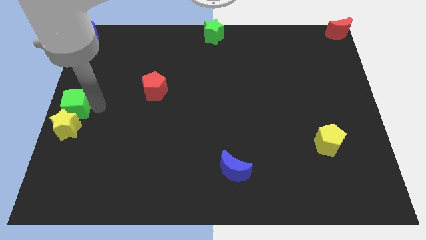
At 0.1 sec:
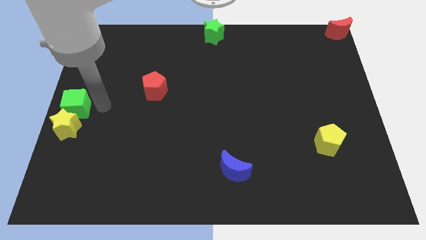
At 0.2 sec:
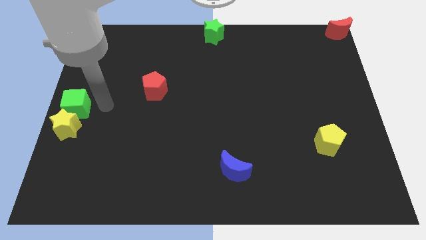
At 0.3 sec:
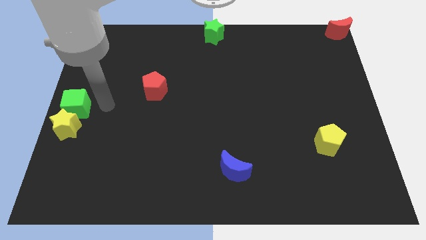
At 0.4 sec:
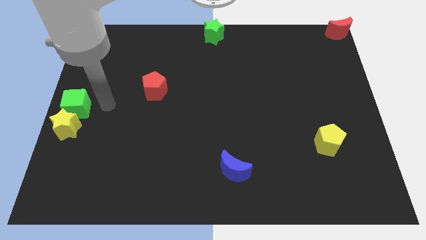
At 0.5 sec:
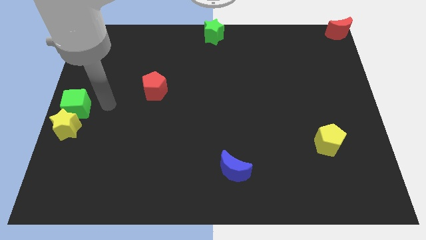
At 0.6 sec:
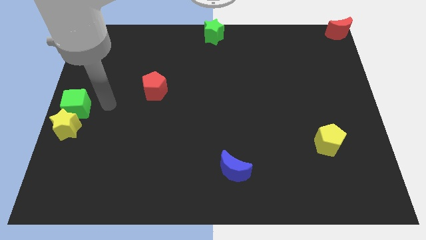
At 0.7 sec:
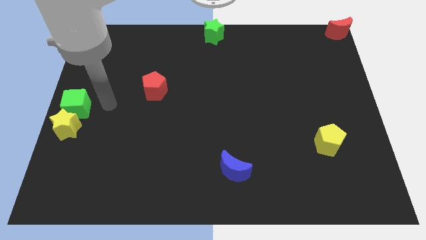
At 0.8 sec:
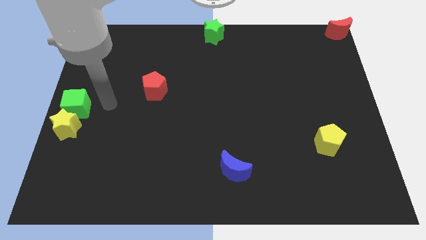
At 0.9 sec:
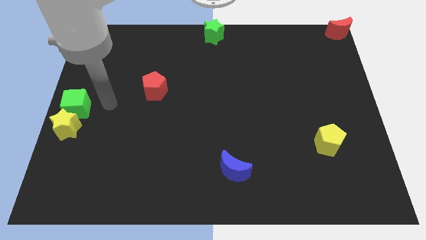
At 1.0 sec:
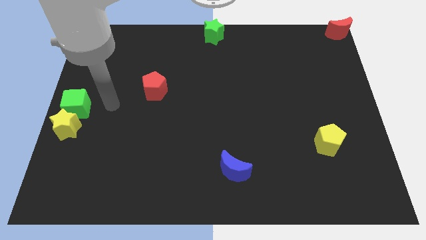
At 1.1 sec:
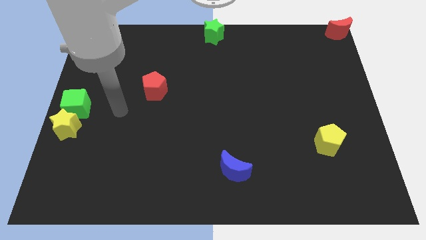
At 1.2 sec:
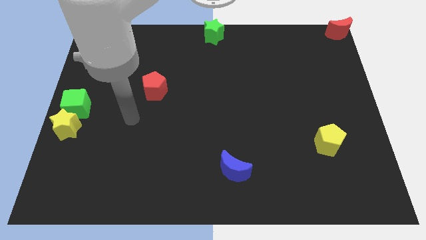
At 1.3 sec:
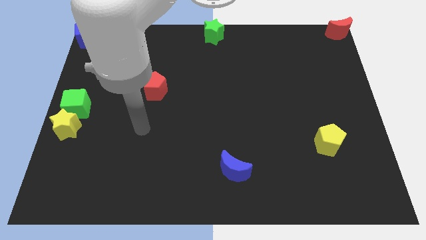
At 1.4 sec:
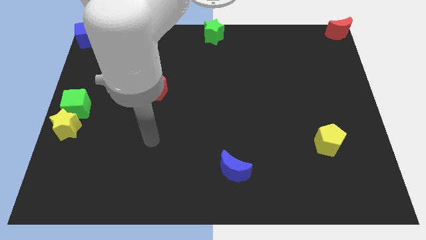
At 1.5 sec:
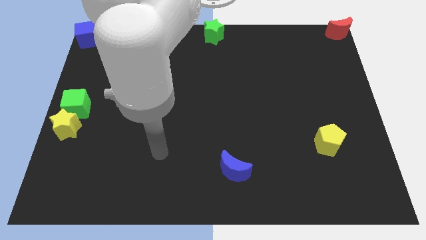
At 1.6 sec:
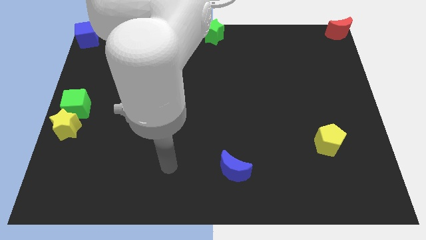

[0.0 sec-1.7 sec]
move the arm away from the green cube

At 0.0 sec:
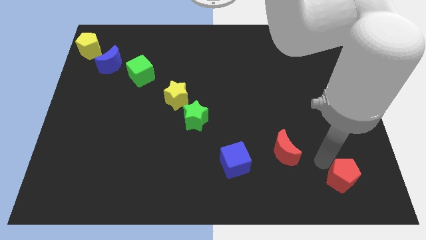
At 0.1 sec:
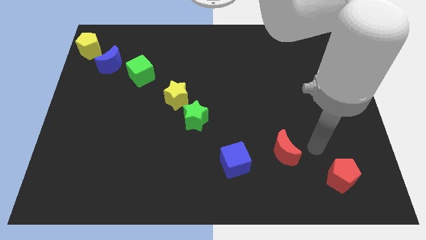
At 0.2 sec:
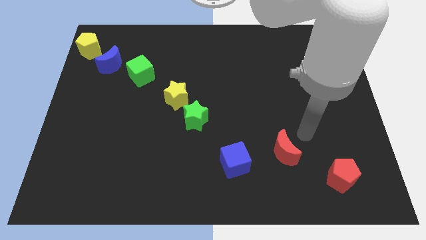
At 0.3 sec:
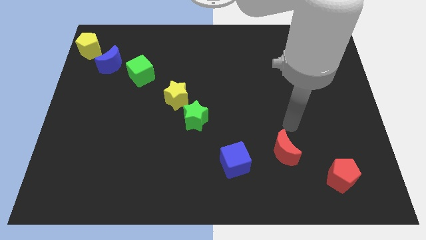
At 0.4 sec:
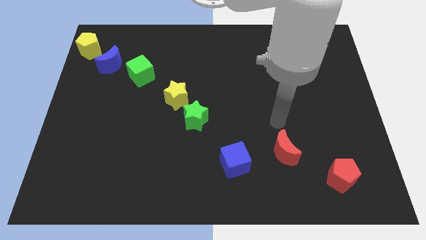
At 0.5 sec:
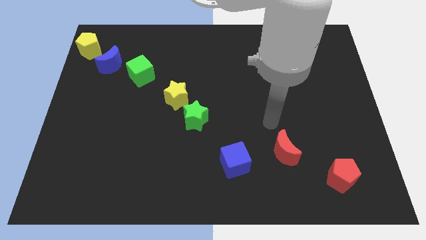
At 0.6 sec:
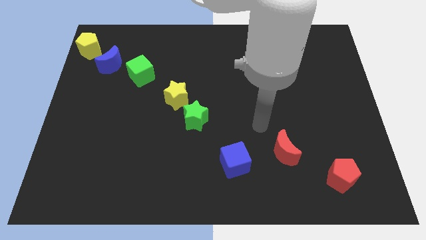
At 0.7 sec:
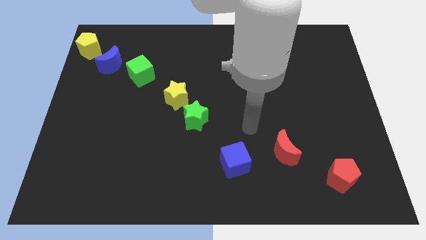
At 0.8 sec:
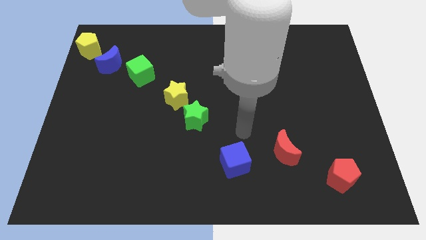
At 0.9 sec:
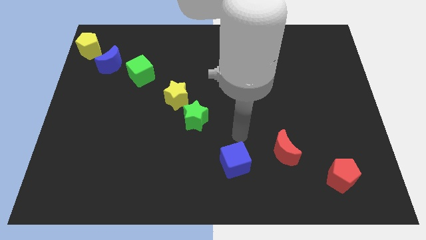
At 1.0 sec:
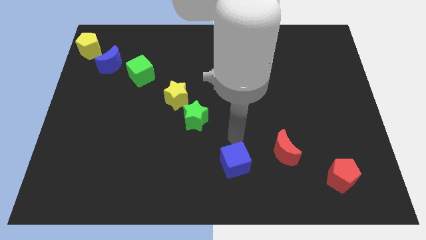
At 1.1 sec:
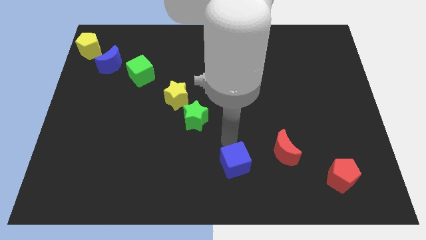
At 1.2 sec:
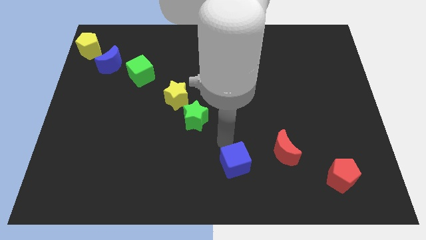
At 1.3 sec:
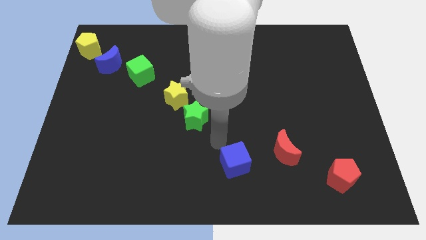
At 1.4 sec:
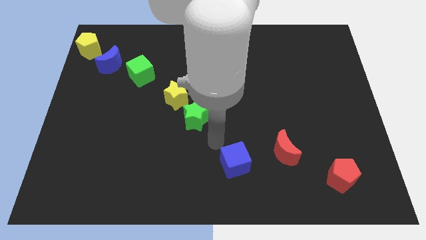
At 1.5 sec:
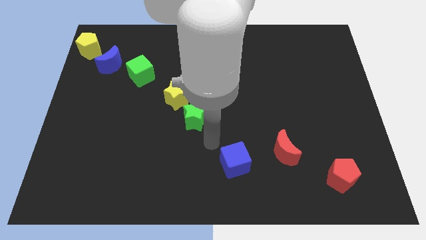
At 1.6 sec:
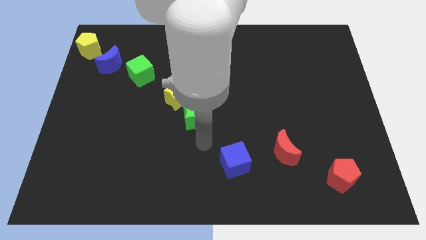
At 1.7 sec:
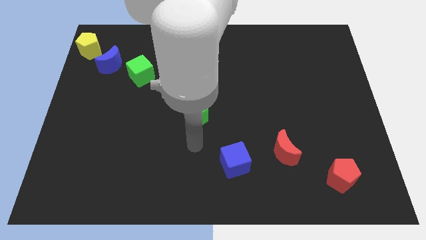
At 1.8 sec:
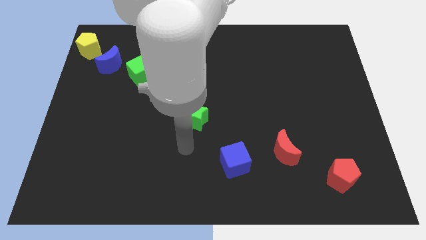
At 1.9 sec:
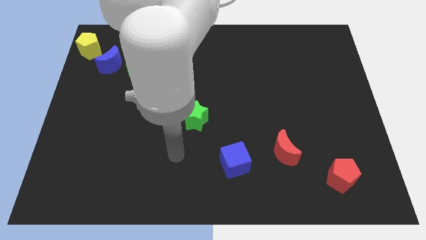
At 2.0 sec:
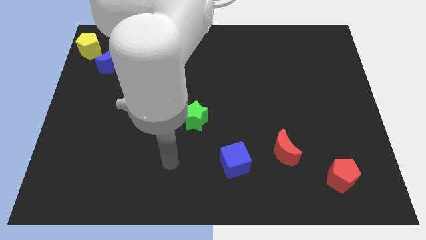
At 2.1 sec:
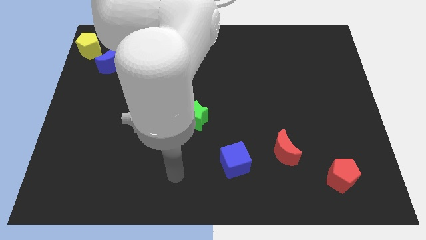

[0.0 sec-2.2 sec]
move the arm from bottom right to bottom left

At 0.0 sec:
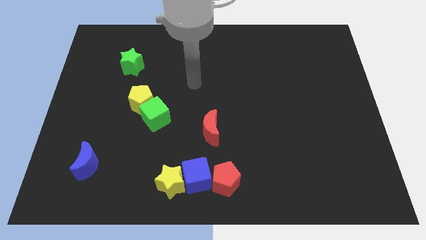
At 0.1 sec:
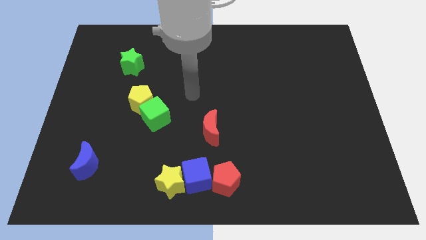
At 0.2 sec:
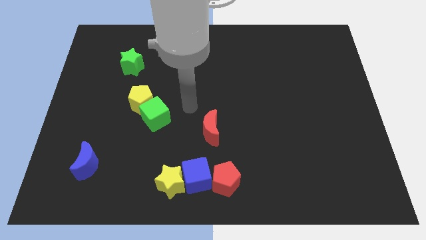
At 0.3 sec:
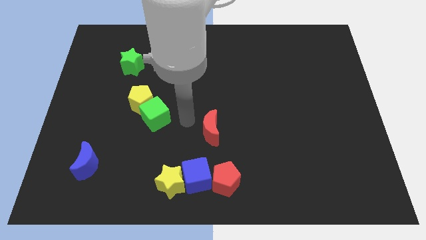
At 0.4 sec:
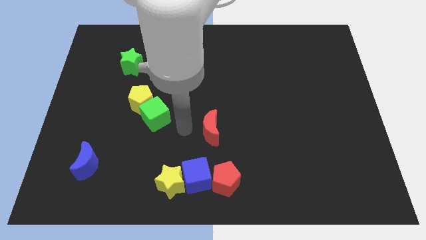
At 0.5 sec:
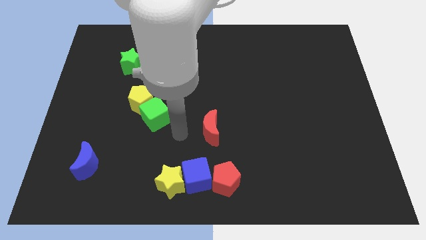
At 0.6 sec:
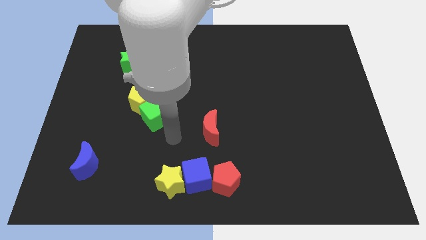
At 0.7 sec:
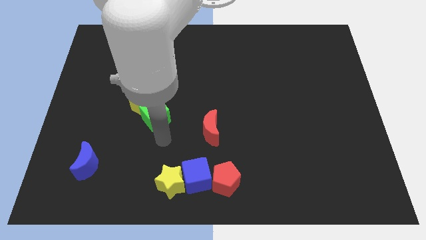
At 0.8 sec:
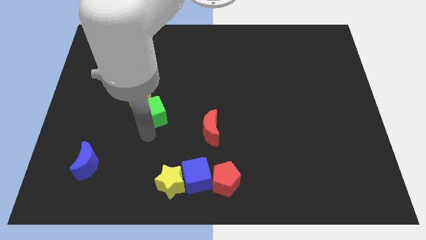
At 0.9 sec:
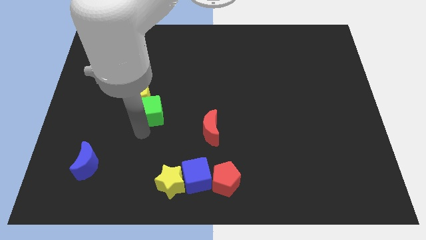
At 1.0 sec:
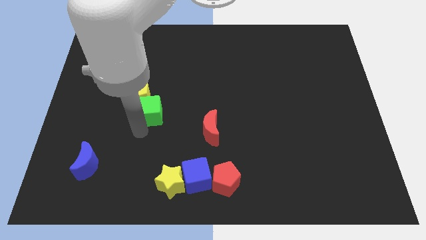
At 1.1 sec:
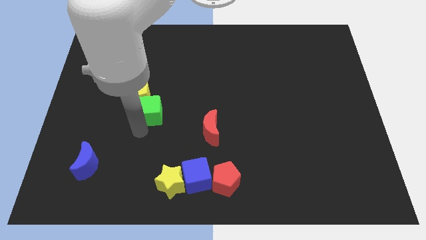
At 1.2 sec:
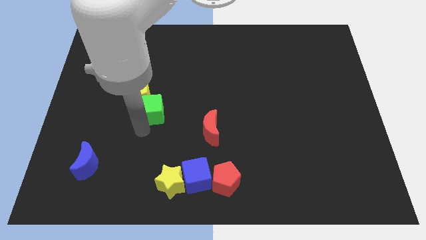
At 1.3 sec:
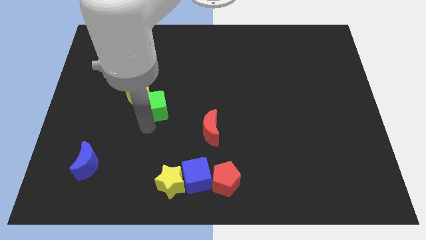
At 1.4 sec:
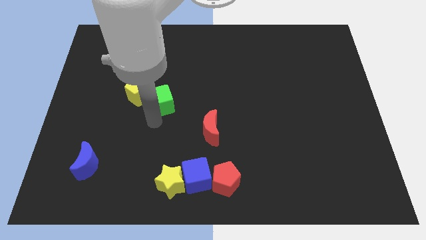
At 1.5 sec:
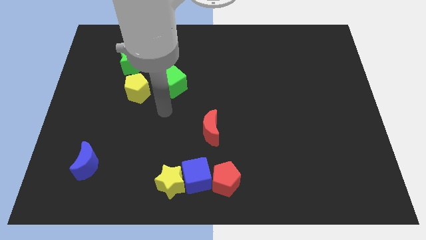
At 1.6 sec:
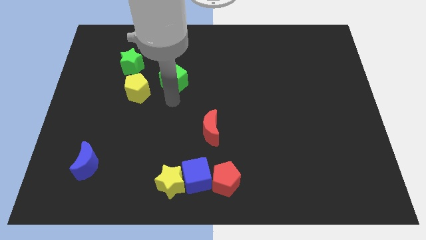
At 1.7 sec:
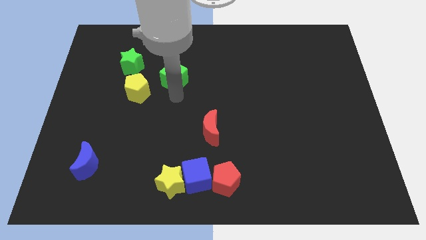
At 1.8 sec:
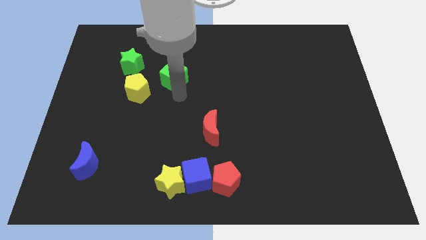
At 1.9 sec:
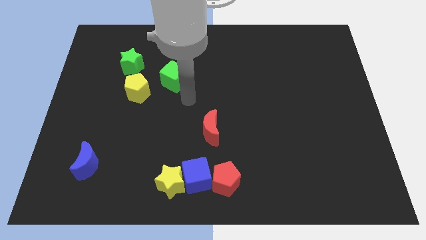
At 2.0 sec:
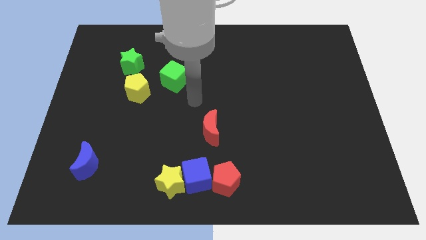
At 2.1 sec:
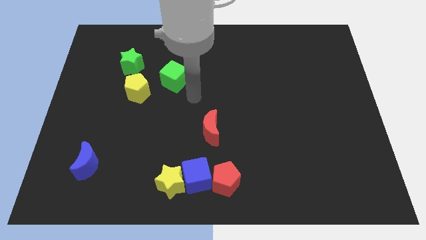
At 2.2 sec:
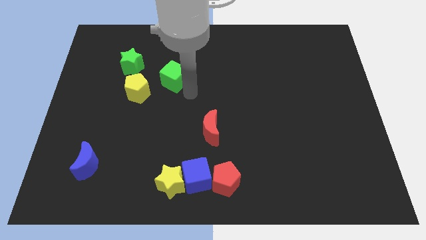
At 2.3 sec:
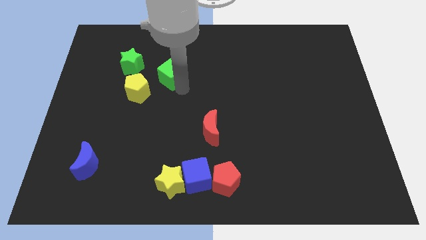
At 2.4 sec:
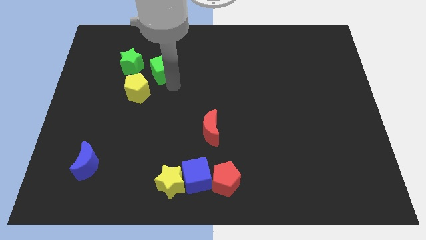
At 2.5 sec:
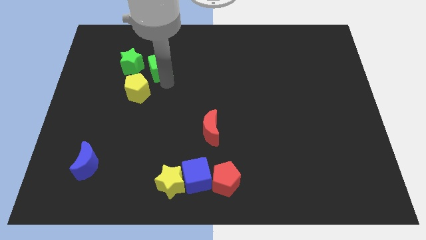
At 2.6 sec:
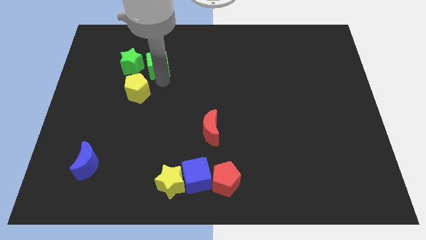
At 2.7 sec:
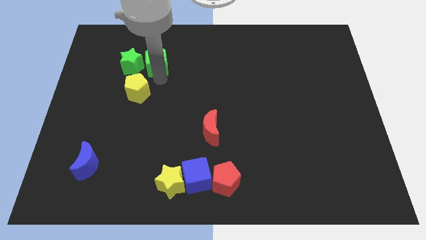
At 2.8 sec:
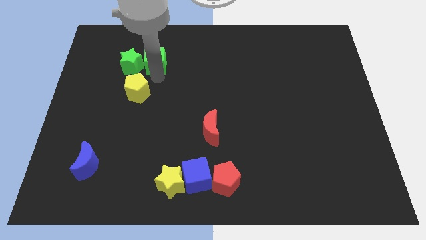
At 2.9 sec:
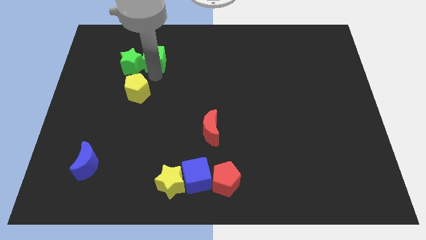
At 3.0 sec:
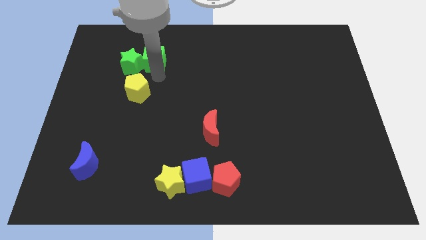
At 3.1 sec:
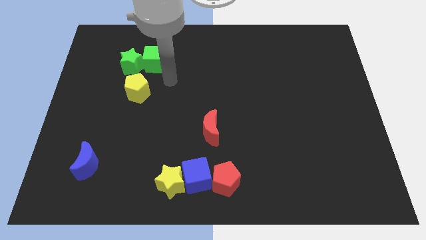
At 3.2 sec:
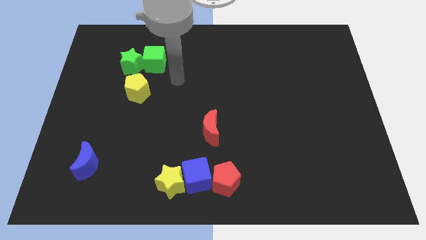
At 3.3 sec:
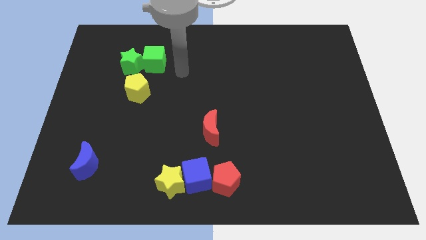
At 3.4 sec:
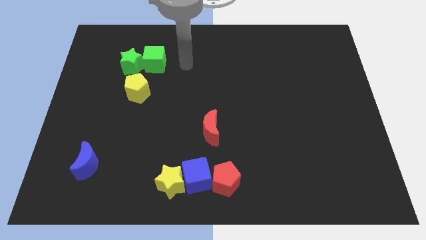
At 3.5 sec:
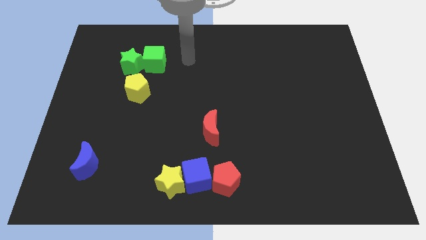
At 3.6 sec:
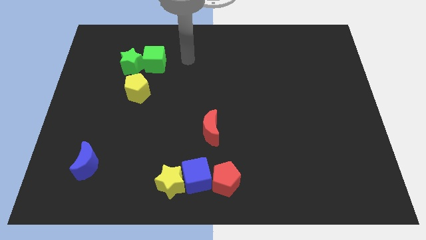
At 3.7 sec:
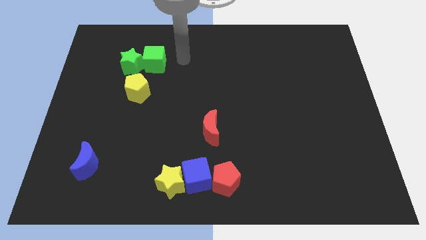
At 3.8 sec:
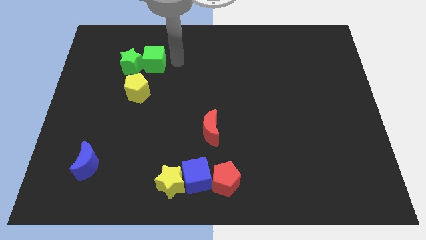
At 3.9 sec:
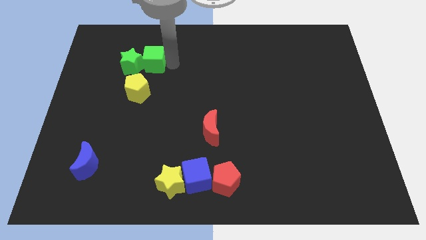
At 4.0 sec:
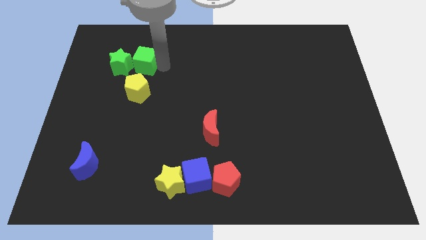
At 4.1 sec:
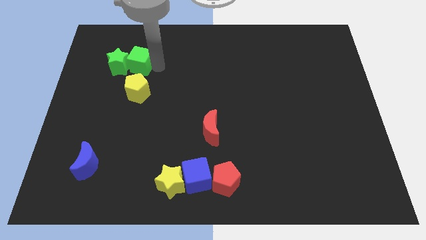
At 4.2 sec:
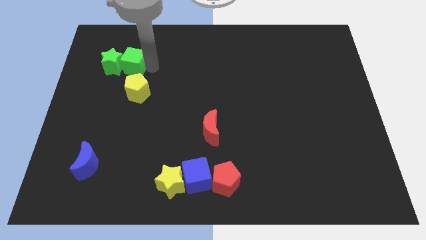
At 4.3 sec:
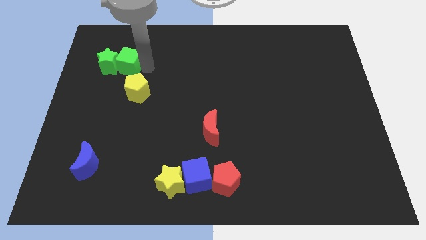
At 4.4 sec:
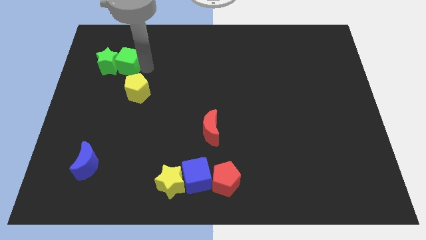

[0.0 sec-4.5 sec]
push the green cube into the green star towards the left top of the board

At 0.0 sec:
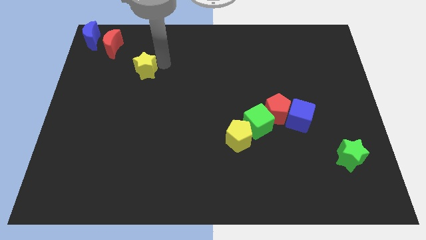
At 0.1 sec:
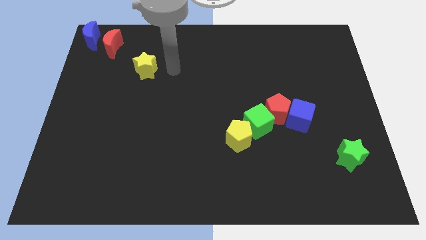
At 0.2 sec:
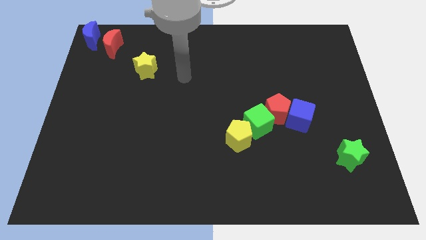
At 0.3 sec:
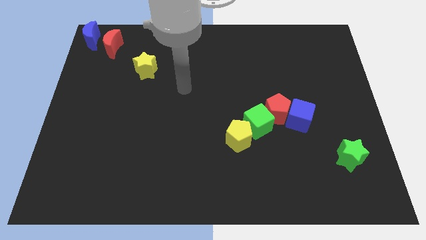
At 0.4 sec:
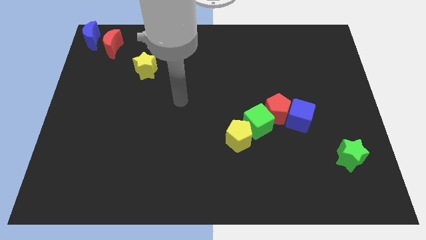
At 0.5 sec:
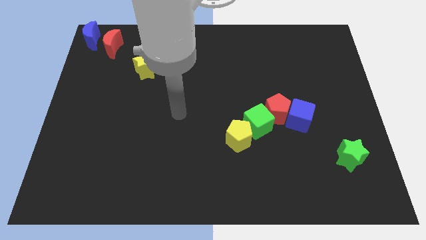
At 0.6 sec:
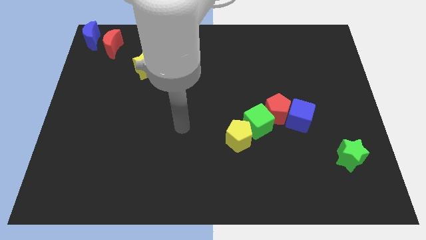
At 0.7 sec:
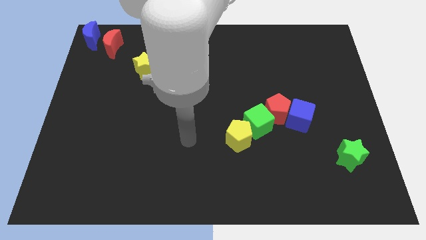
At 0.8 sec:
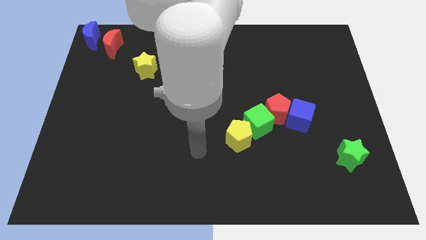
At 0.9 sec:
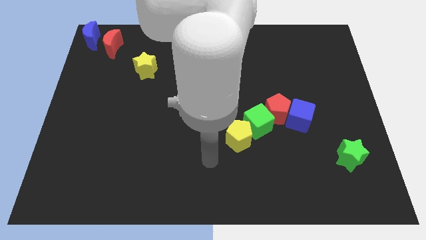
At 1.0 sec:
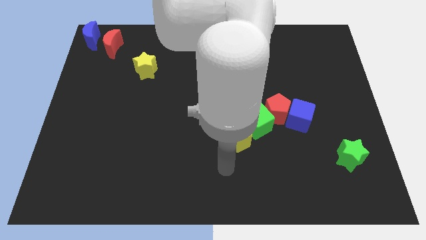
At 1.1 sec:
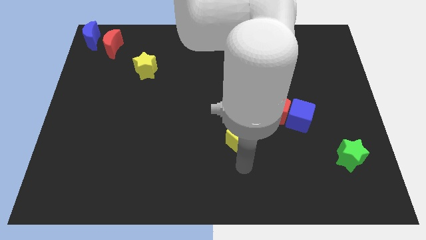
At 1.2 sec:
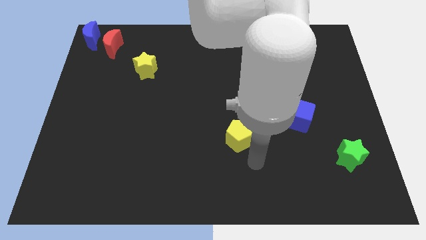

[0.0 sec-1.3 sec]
take your hand away from the yellow star
